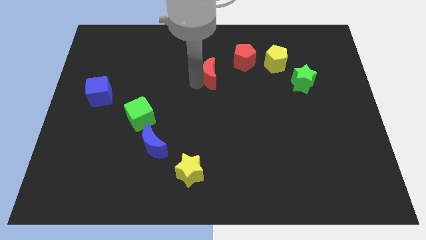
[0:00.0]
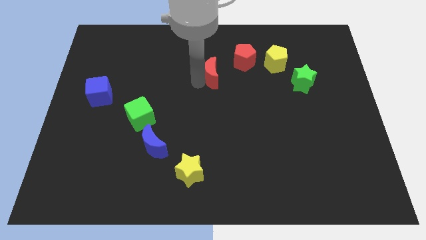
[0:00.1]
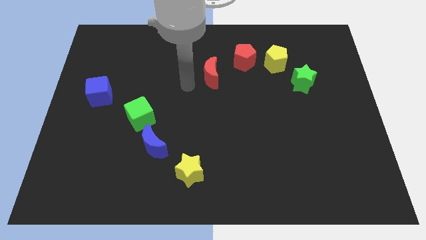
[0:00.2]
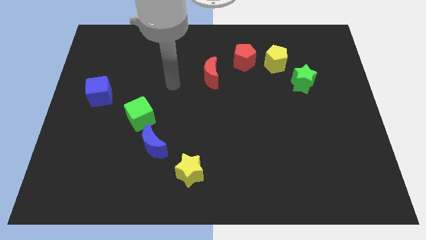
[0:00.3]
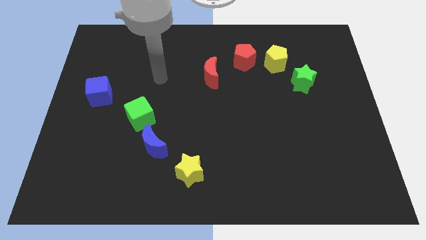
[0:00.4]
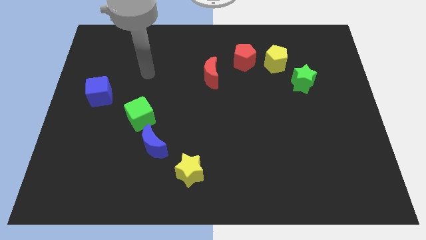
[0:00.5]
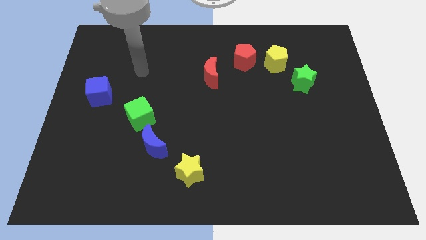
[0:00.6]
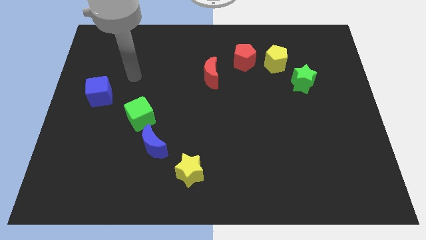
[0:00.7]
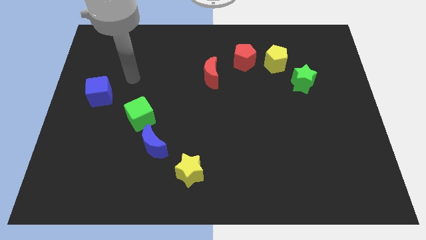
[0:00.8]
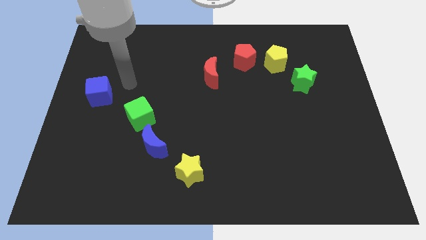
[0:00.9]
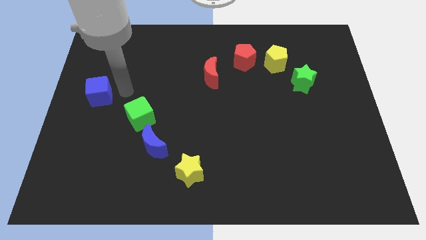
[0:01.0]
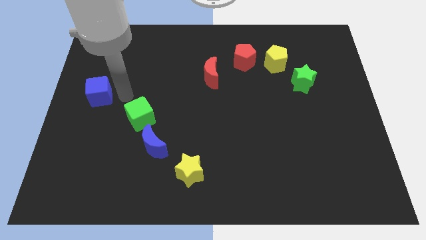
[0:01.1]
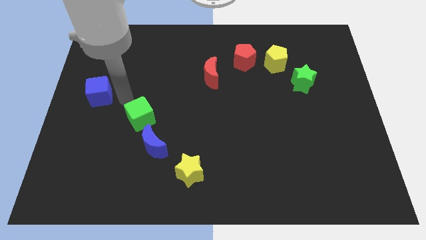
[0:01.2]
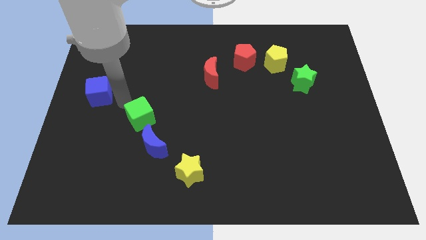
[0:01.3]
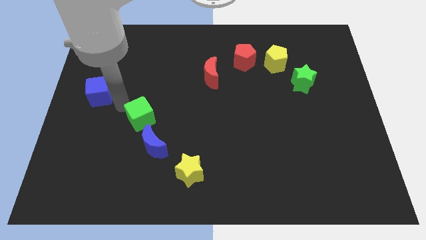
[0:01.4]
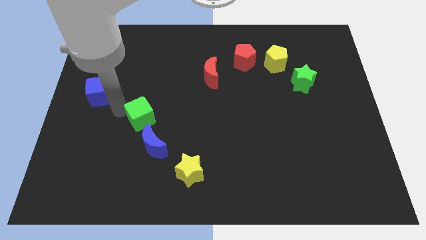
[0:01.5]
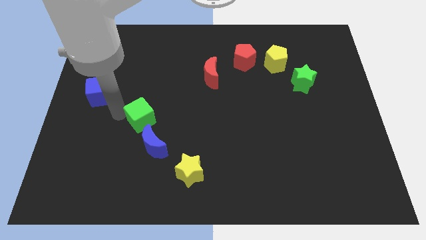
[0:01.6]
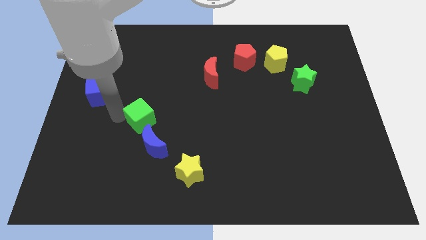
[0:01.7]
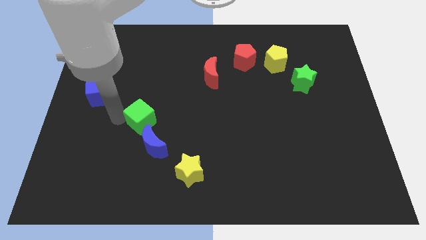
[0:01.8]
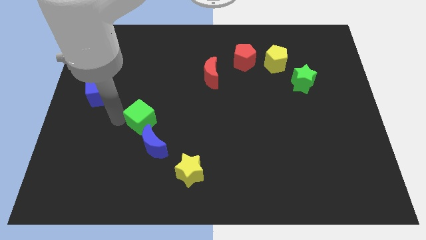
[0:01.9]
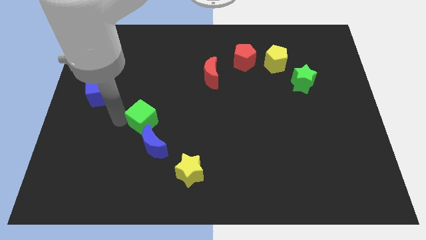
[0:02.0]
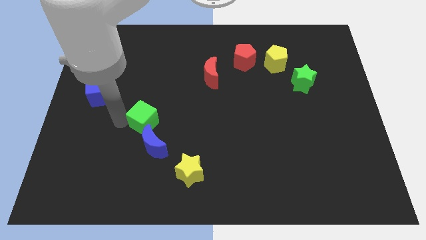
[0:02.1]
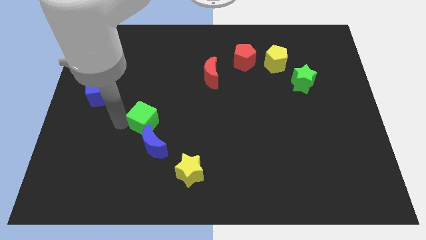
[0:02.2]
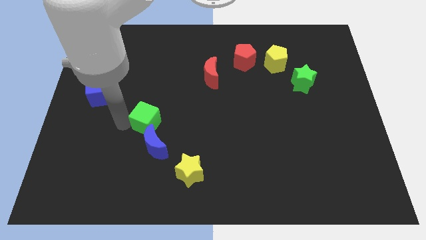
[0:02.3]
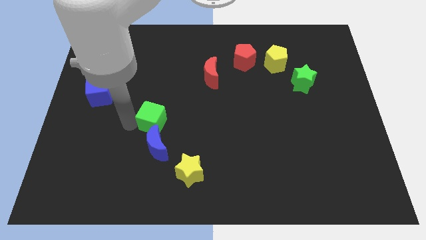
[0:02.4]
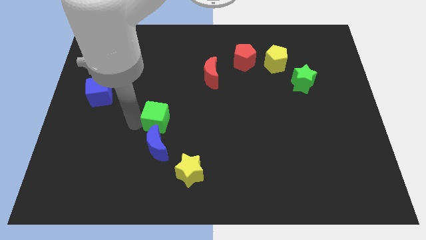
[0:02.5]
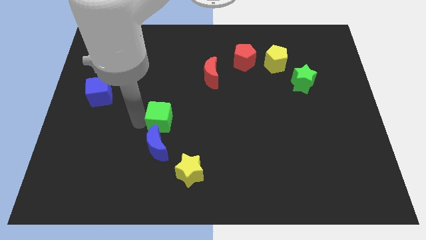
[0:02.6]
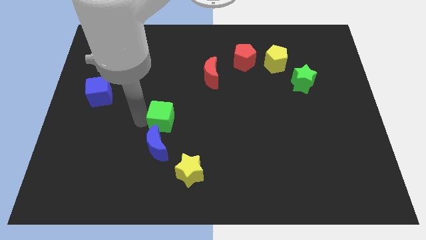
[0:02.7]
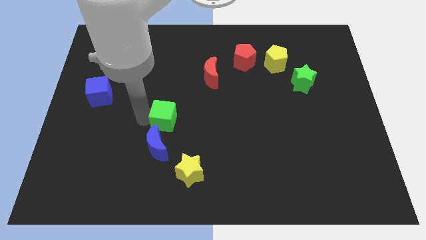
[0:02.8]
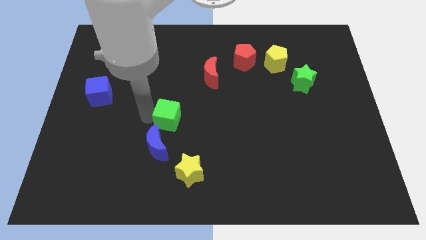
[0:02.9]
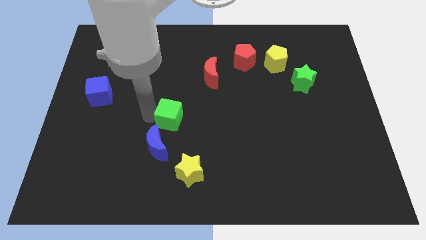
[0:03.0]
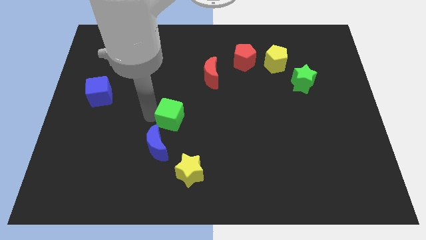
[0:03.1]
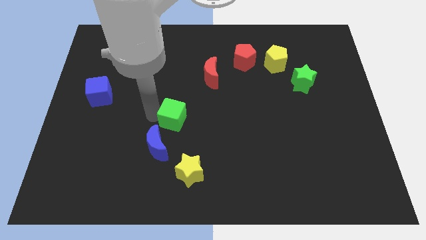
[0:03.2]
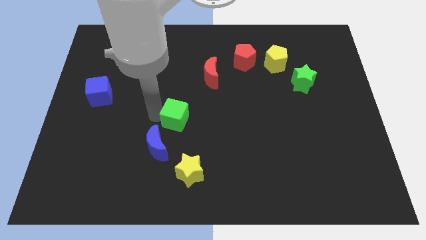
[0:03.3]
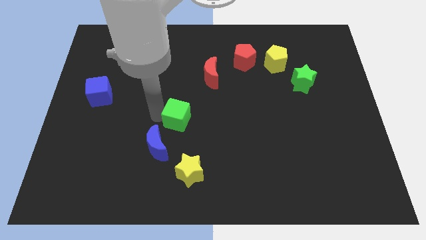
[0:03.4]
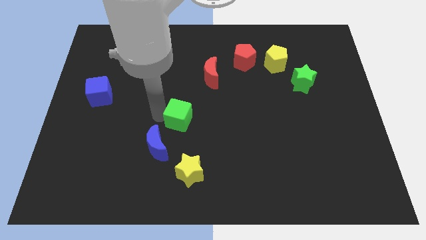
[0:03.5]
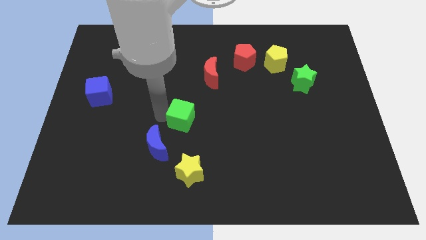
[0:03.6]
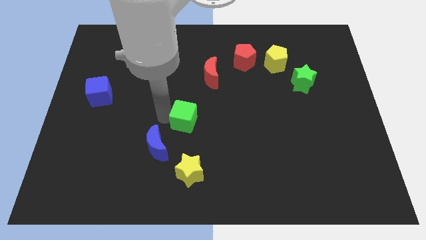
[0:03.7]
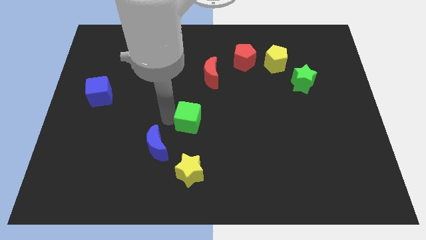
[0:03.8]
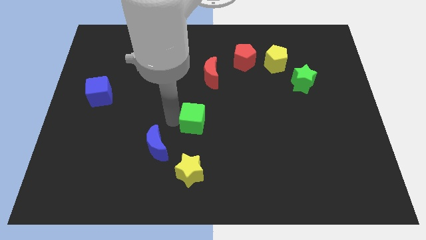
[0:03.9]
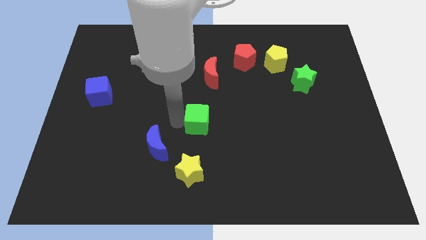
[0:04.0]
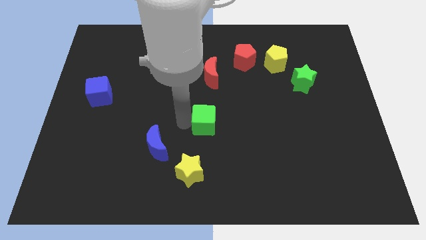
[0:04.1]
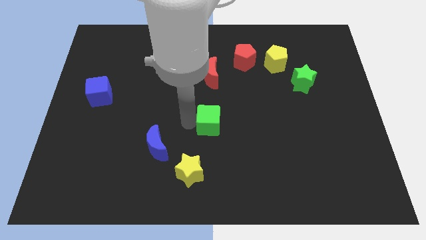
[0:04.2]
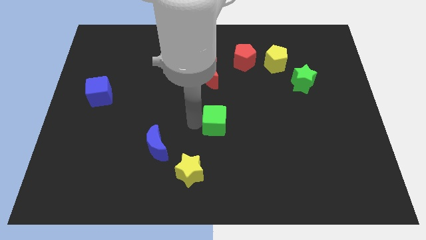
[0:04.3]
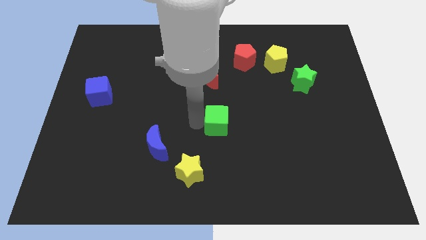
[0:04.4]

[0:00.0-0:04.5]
push the green cube to the bottom of the red crescent

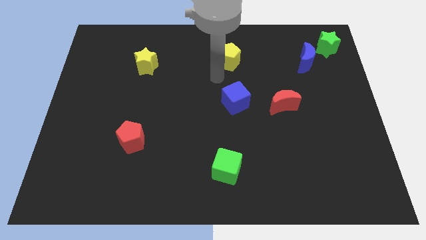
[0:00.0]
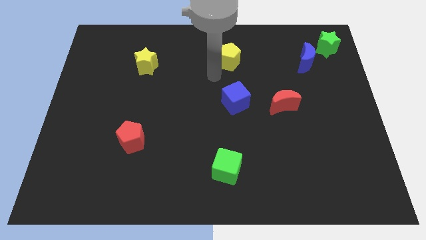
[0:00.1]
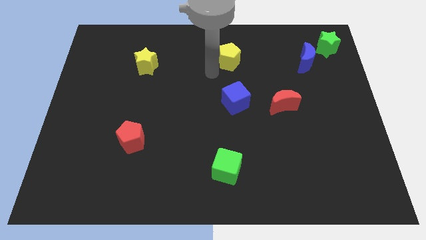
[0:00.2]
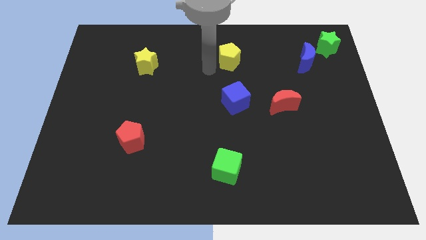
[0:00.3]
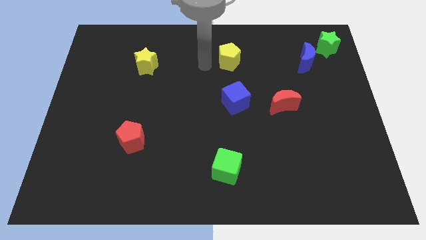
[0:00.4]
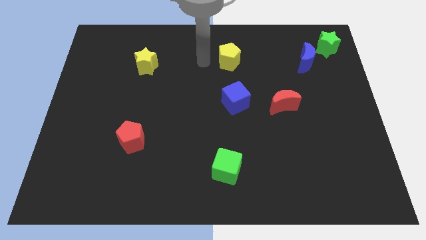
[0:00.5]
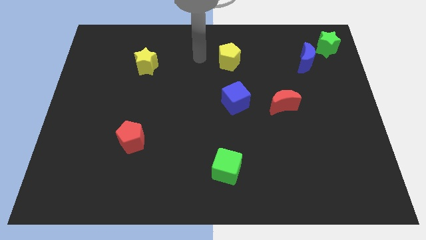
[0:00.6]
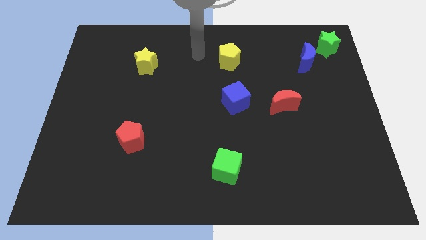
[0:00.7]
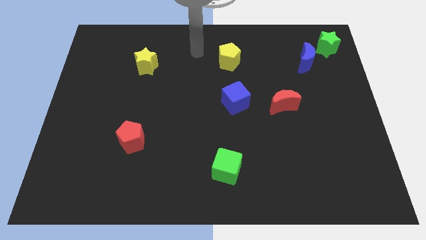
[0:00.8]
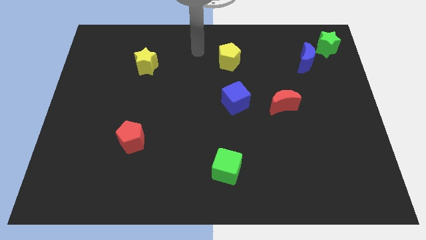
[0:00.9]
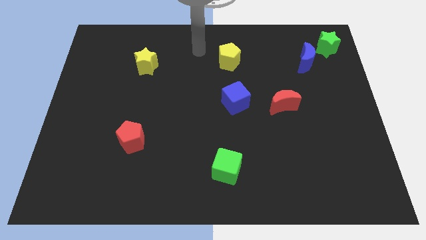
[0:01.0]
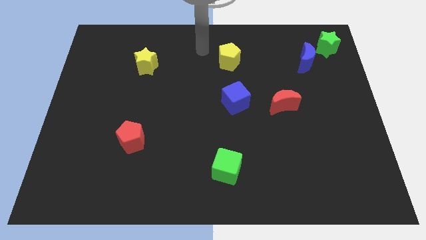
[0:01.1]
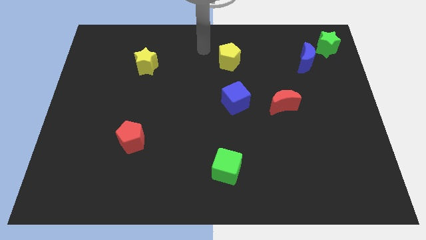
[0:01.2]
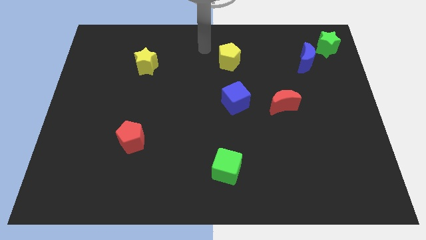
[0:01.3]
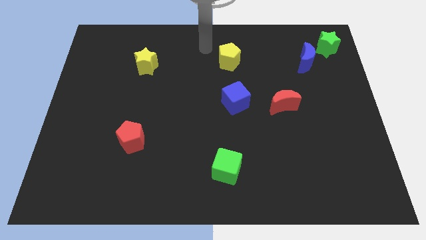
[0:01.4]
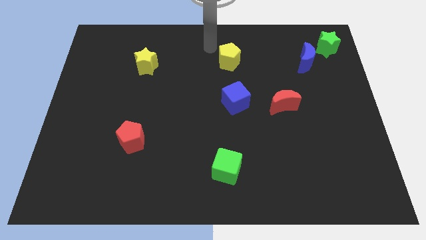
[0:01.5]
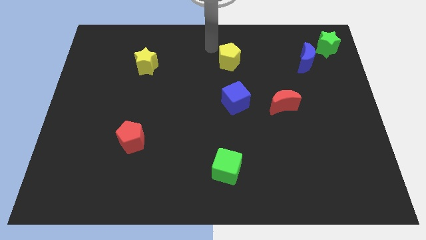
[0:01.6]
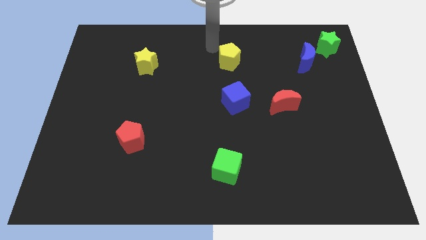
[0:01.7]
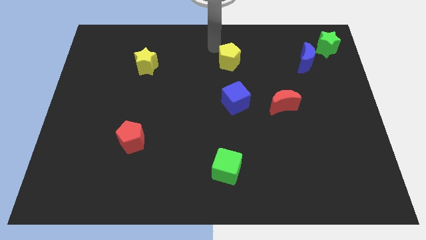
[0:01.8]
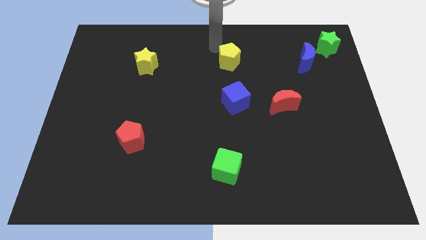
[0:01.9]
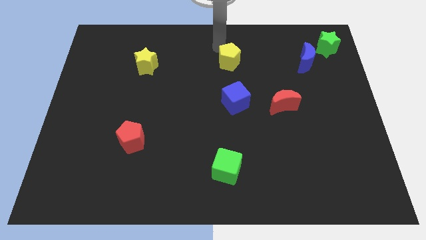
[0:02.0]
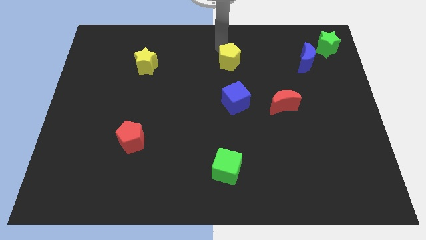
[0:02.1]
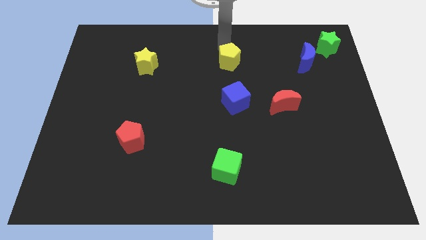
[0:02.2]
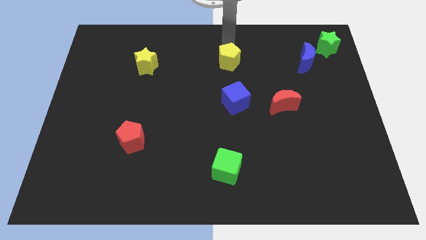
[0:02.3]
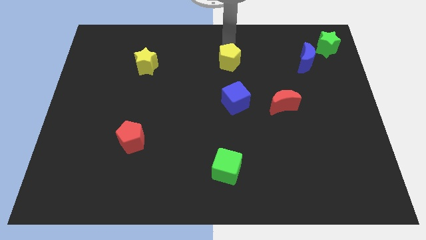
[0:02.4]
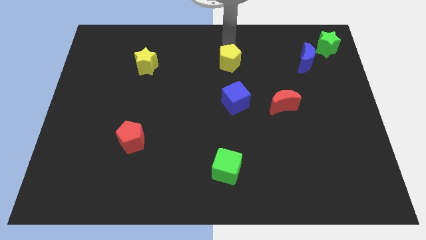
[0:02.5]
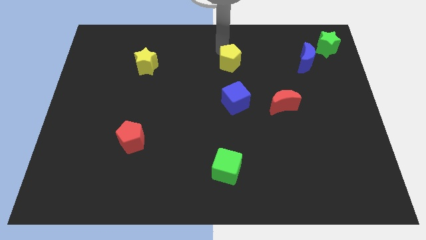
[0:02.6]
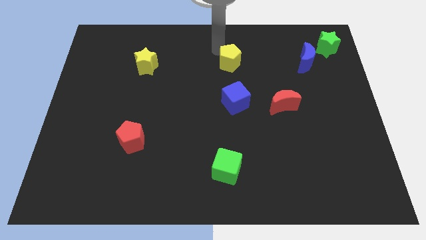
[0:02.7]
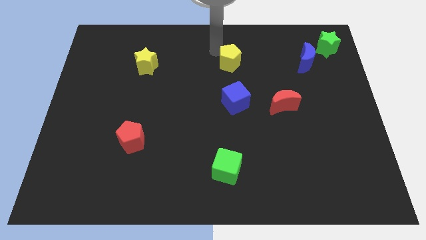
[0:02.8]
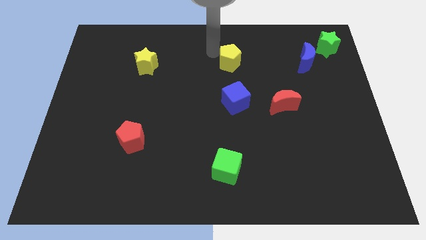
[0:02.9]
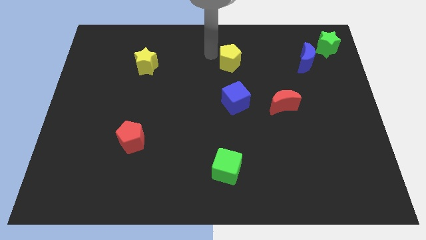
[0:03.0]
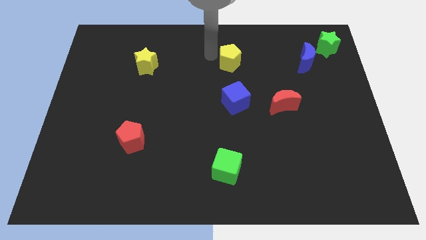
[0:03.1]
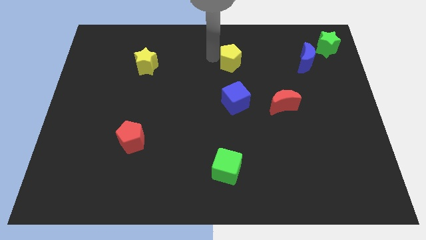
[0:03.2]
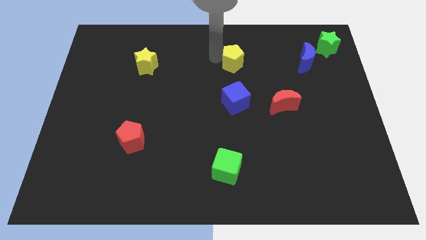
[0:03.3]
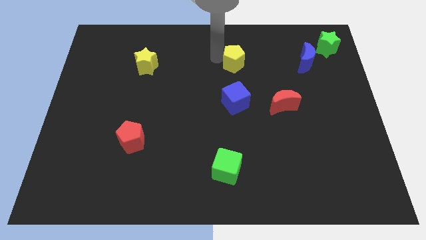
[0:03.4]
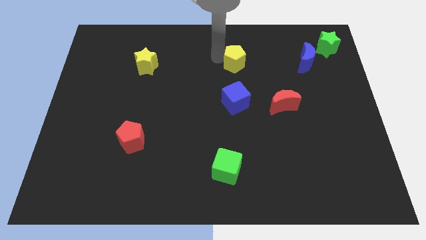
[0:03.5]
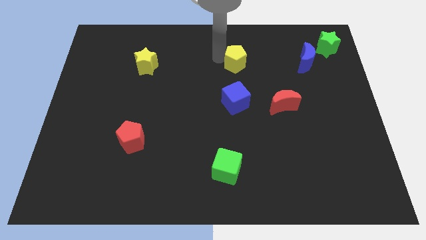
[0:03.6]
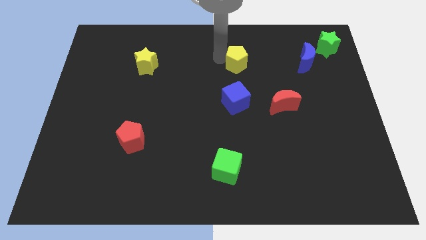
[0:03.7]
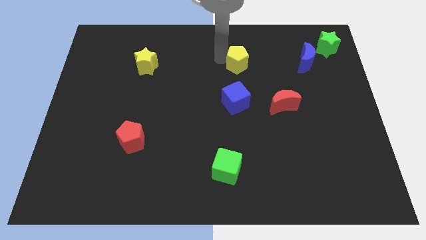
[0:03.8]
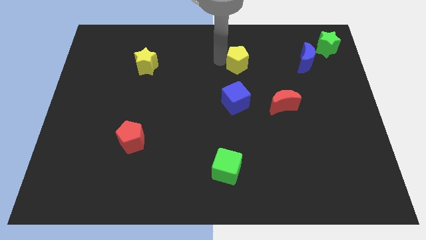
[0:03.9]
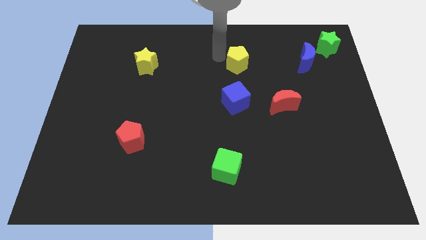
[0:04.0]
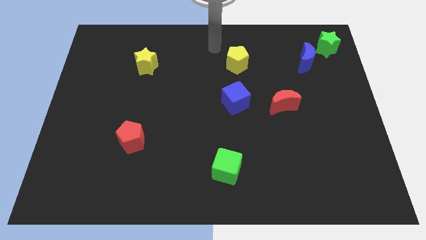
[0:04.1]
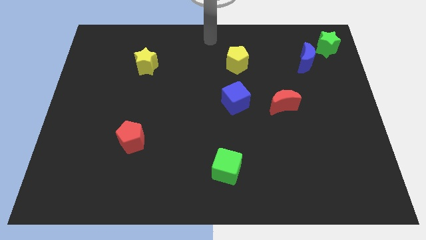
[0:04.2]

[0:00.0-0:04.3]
adjust the yellow pentagon above the blue cube
